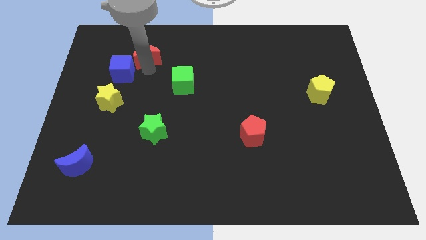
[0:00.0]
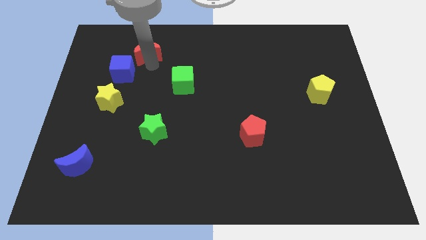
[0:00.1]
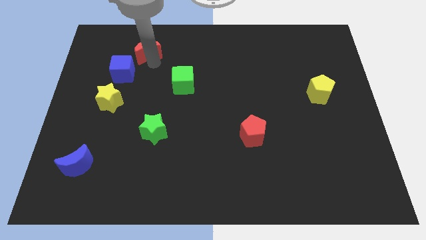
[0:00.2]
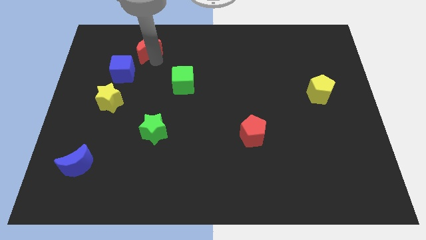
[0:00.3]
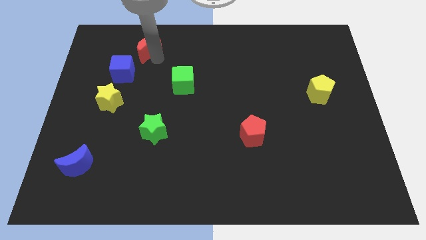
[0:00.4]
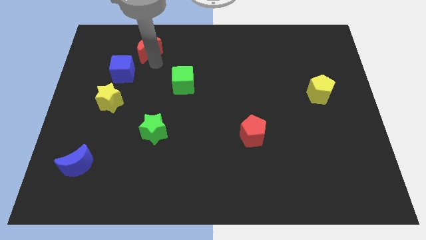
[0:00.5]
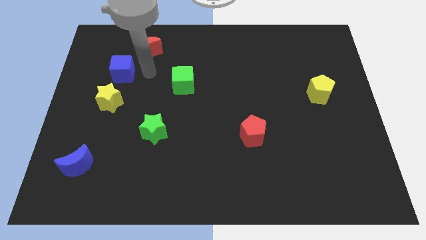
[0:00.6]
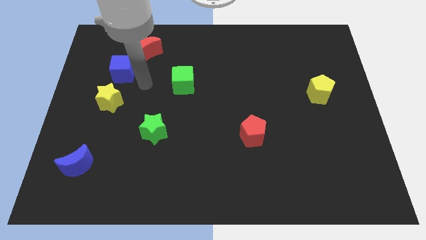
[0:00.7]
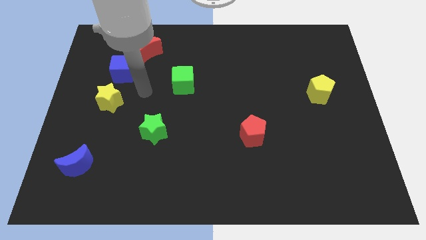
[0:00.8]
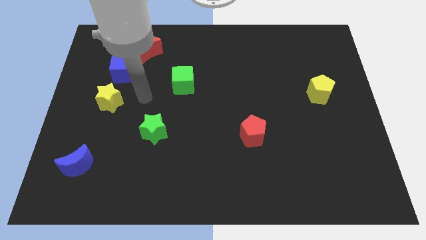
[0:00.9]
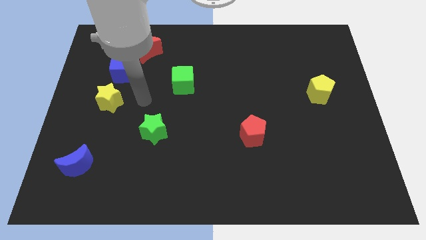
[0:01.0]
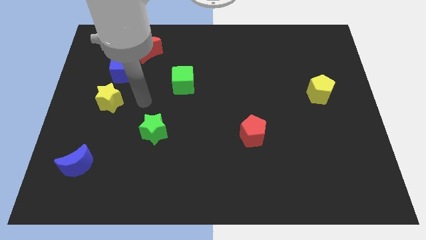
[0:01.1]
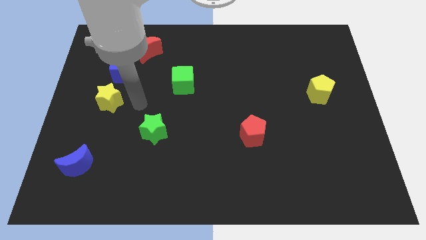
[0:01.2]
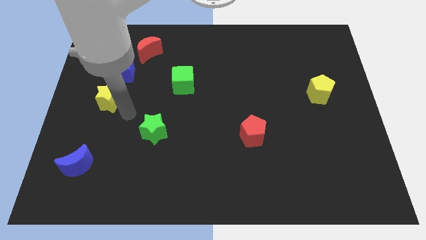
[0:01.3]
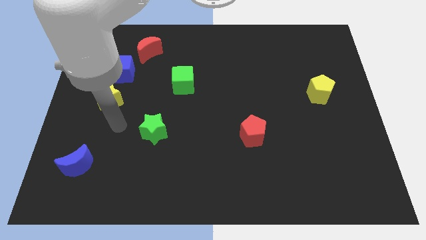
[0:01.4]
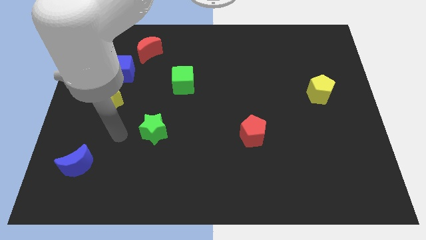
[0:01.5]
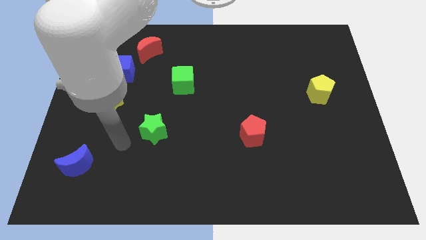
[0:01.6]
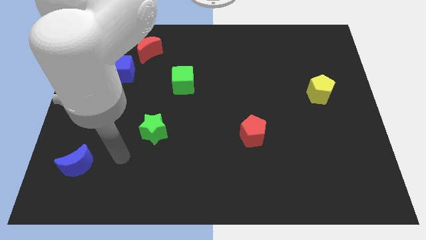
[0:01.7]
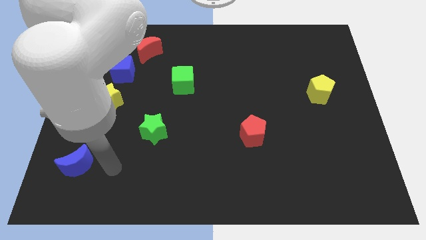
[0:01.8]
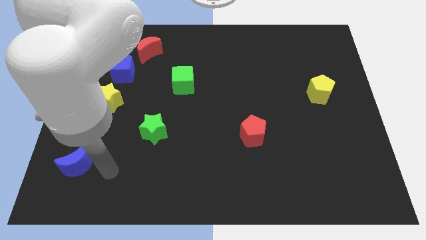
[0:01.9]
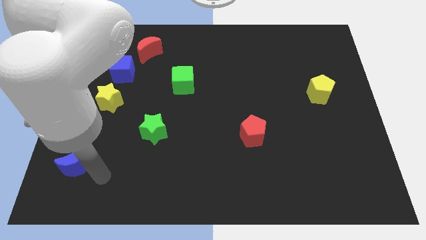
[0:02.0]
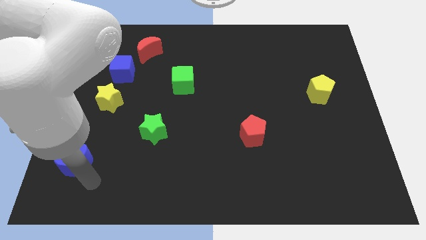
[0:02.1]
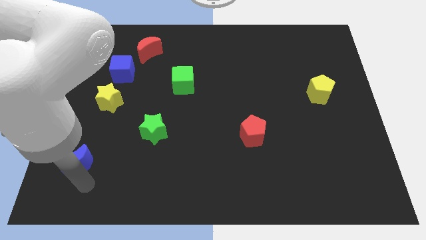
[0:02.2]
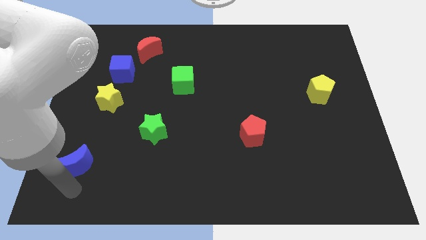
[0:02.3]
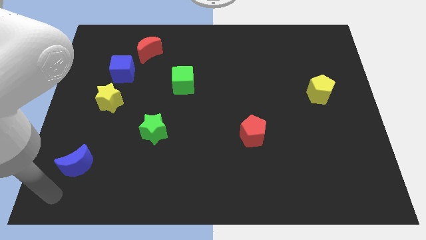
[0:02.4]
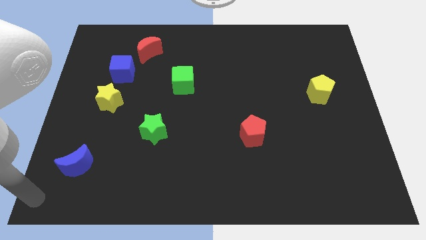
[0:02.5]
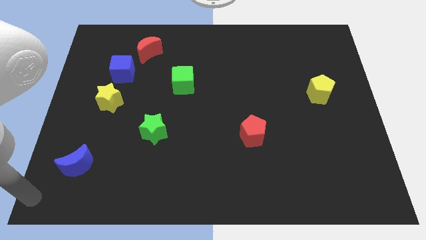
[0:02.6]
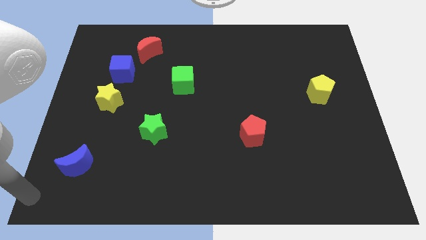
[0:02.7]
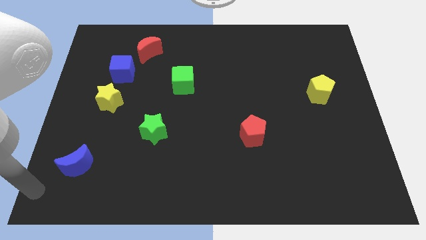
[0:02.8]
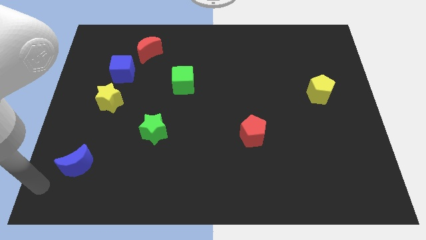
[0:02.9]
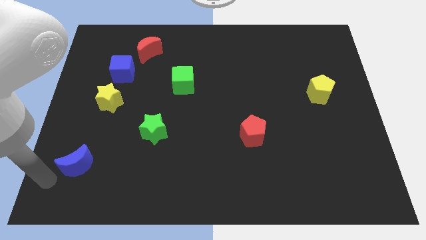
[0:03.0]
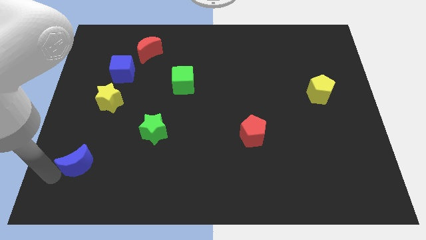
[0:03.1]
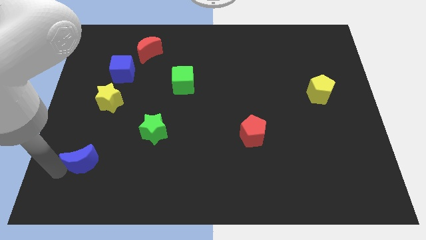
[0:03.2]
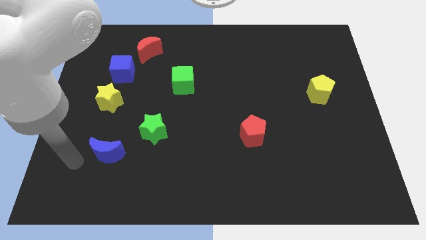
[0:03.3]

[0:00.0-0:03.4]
move your arm diagonally on the bottom left side

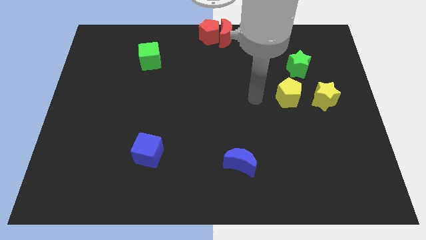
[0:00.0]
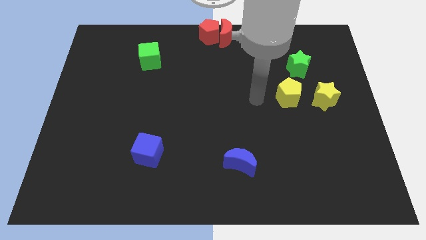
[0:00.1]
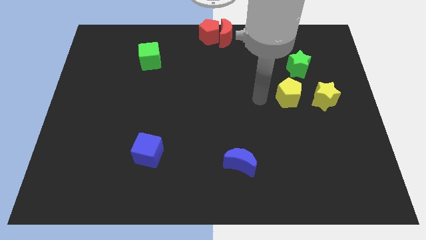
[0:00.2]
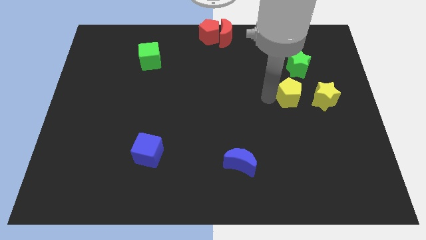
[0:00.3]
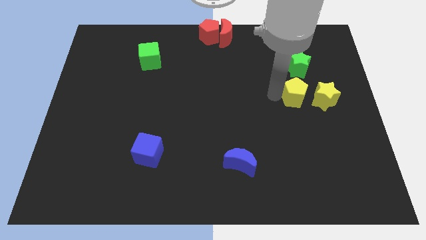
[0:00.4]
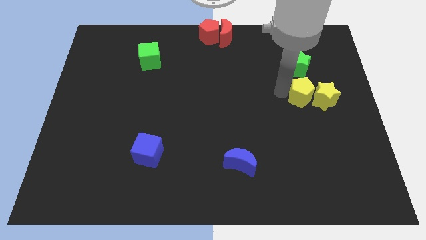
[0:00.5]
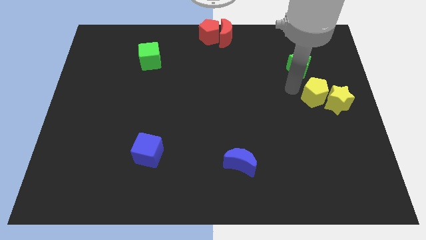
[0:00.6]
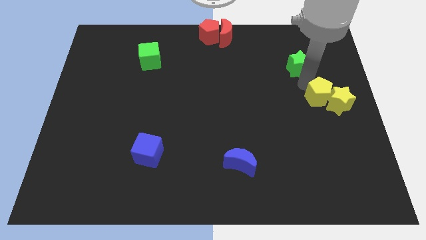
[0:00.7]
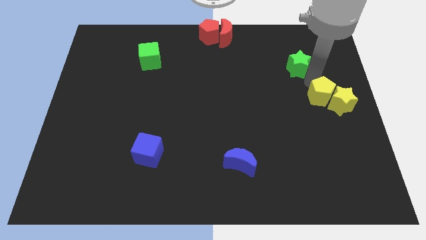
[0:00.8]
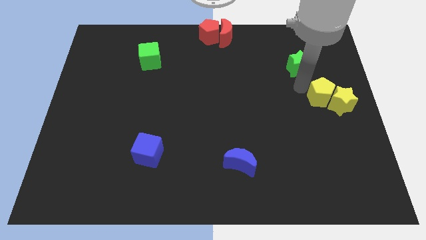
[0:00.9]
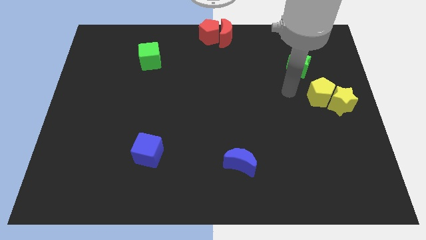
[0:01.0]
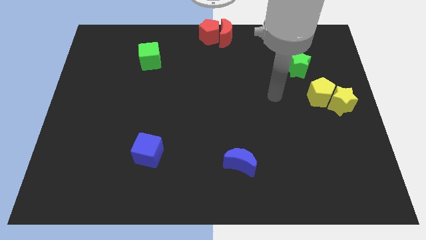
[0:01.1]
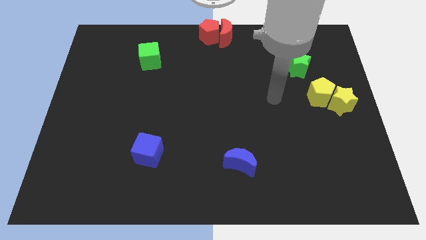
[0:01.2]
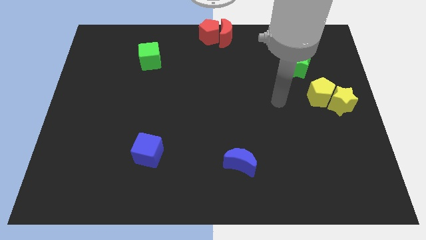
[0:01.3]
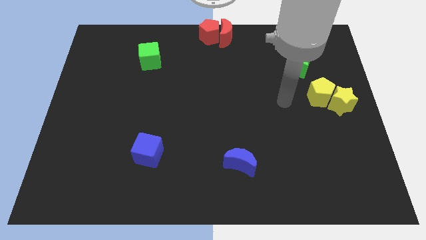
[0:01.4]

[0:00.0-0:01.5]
move the yellow pentagon into the yellow star

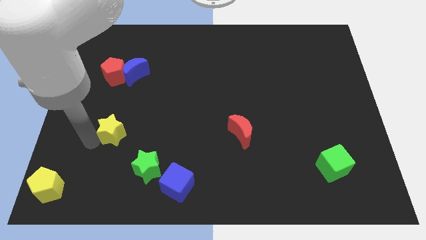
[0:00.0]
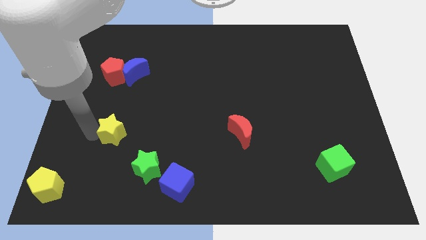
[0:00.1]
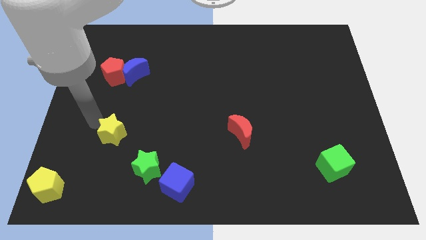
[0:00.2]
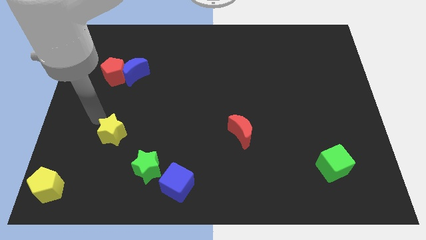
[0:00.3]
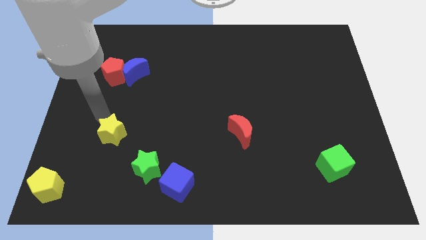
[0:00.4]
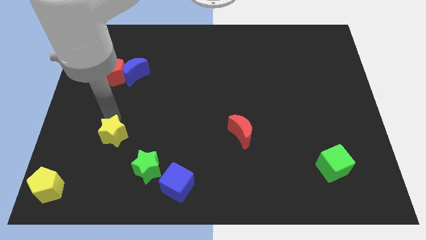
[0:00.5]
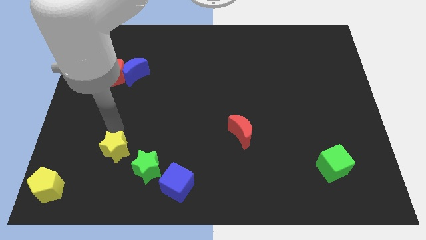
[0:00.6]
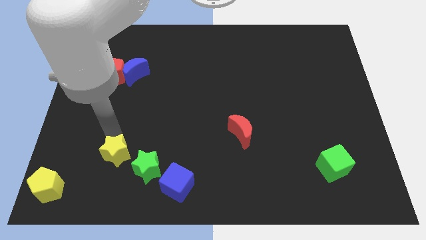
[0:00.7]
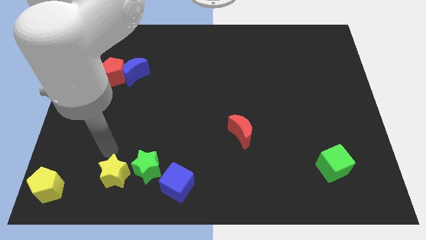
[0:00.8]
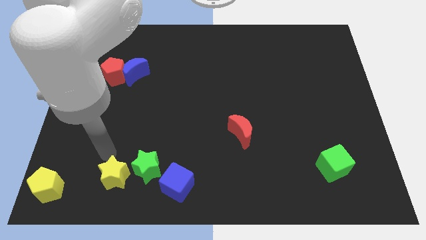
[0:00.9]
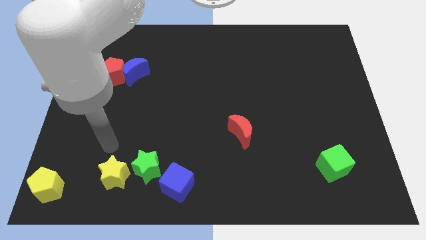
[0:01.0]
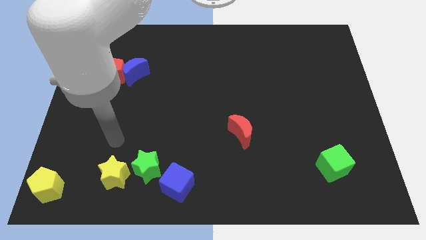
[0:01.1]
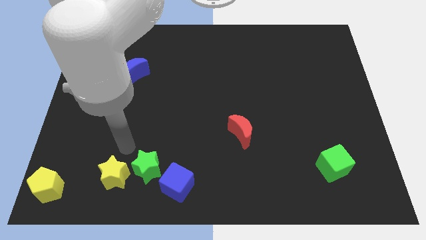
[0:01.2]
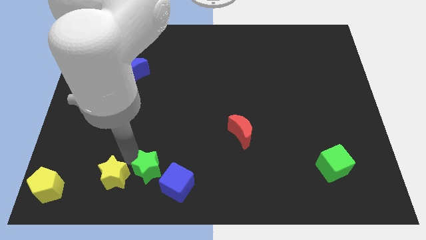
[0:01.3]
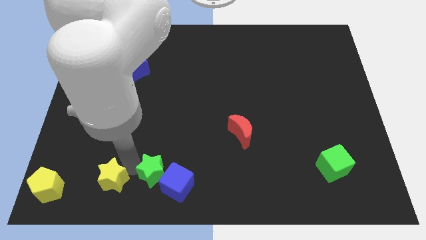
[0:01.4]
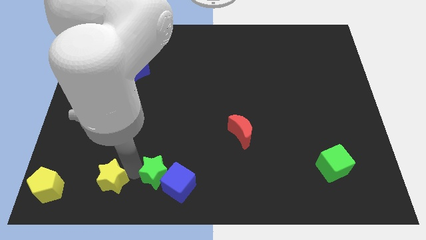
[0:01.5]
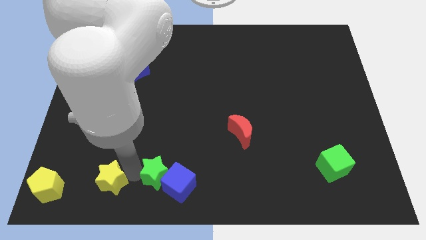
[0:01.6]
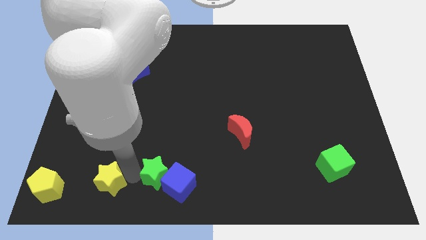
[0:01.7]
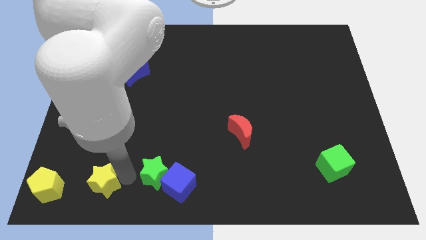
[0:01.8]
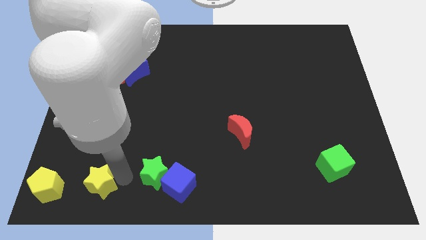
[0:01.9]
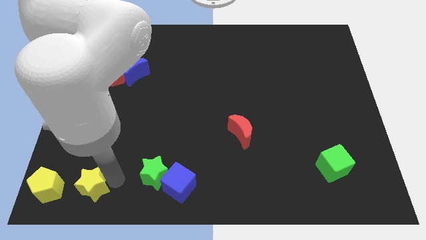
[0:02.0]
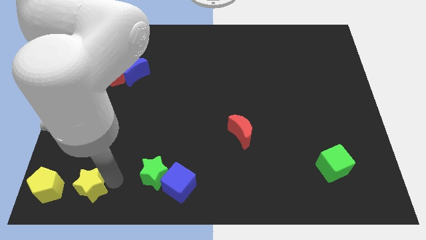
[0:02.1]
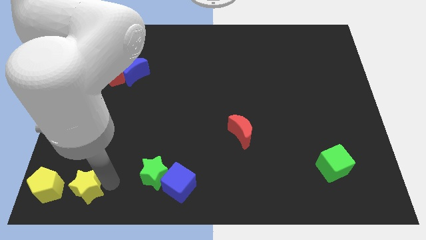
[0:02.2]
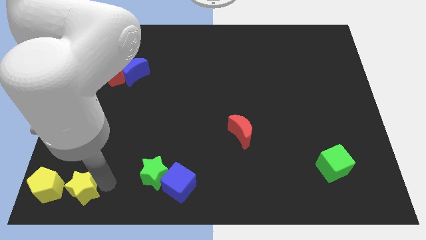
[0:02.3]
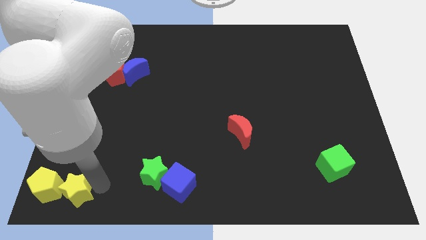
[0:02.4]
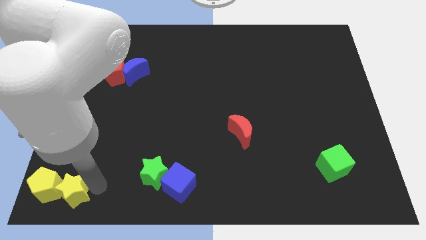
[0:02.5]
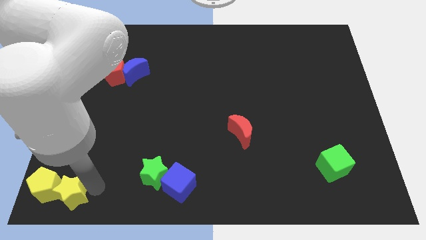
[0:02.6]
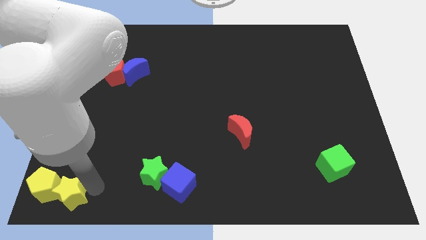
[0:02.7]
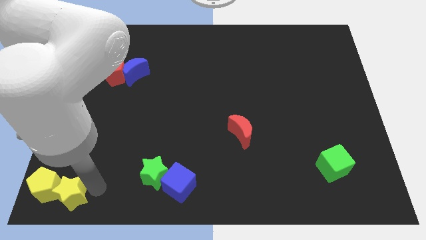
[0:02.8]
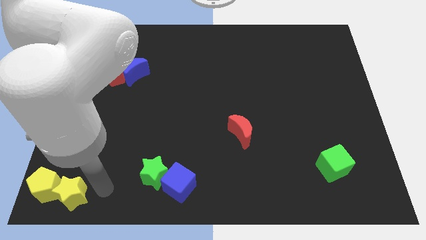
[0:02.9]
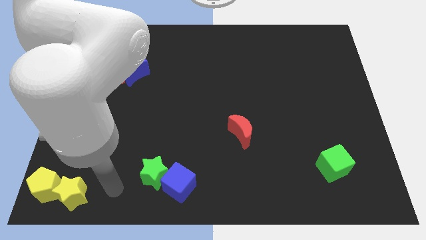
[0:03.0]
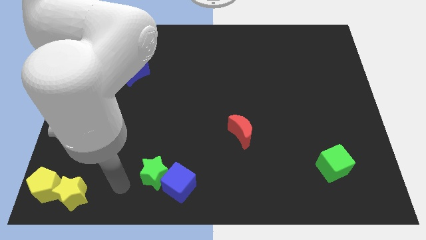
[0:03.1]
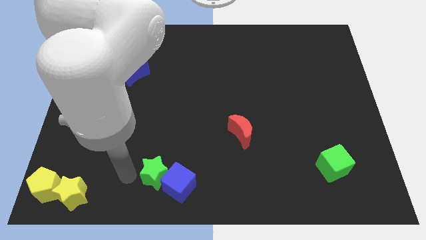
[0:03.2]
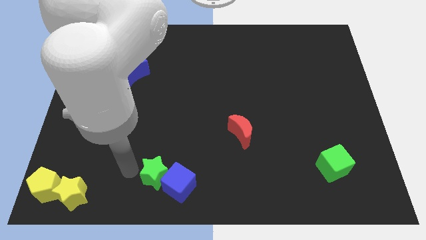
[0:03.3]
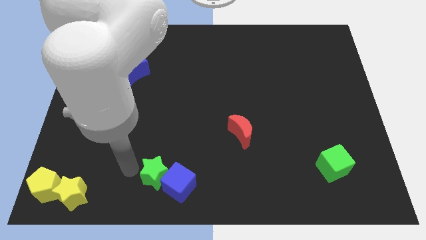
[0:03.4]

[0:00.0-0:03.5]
place yellow star to the bottom left corner of the board

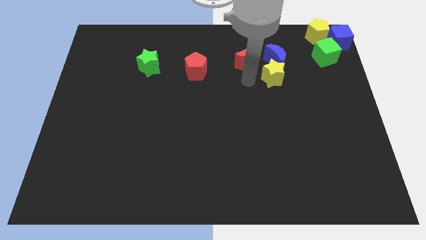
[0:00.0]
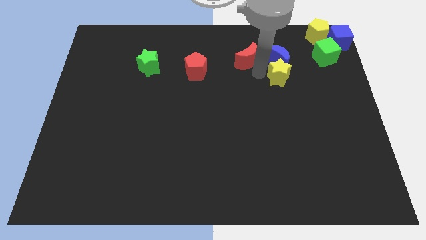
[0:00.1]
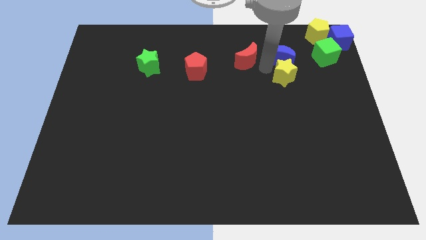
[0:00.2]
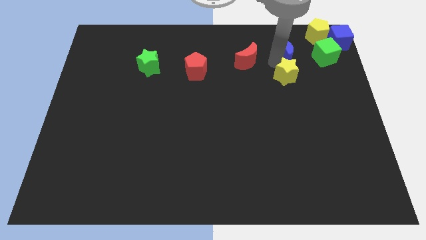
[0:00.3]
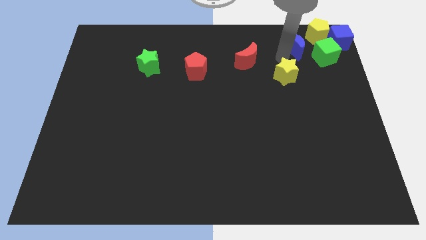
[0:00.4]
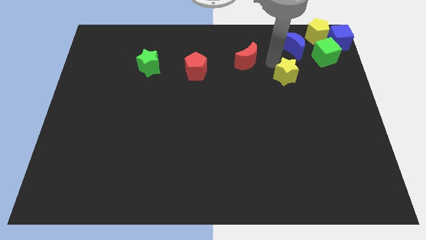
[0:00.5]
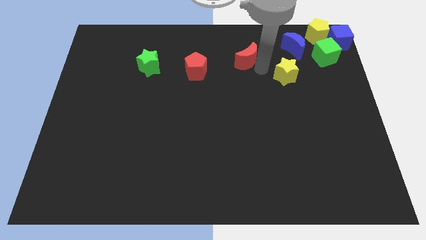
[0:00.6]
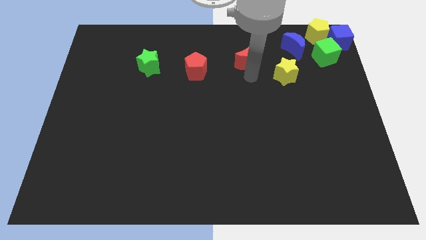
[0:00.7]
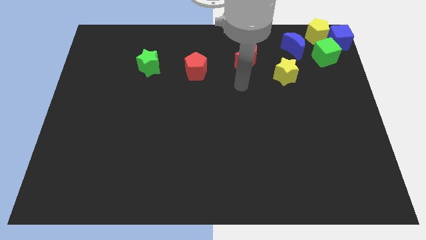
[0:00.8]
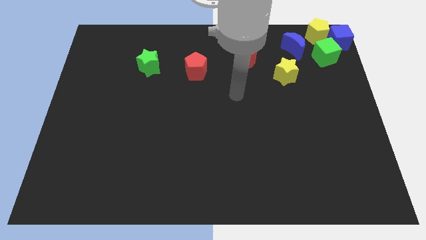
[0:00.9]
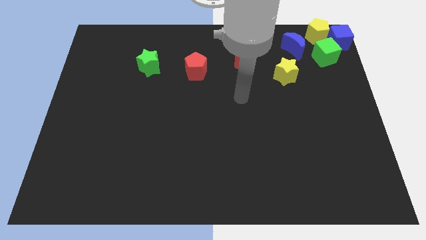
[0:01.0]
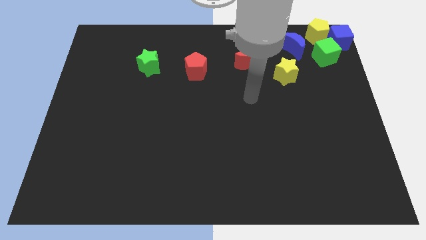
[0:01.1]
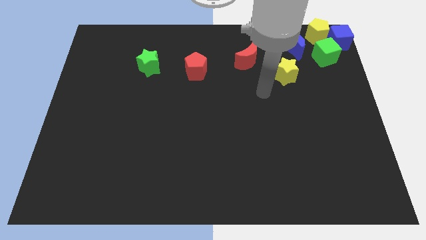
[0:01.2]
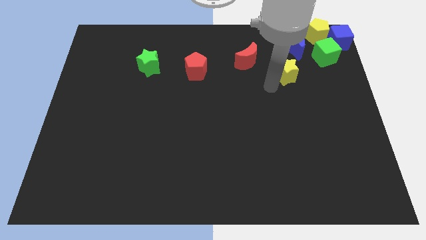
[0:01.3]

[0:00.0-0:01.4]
separate the blue moon from the yellow star
